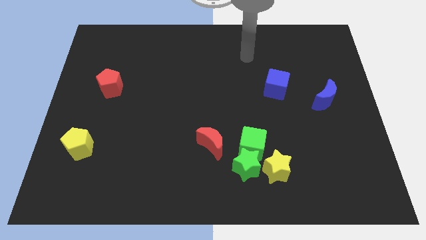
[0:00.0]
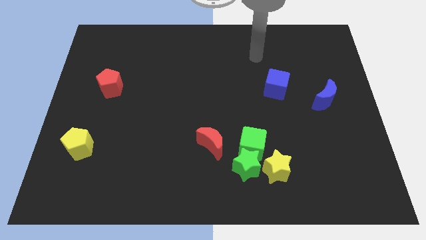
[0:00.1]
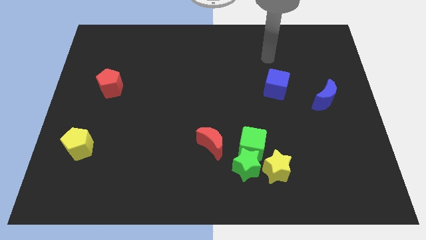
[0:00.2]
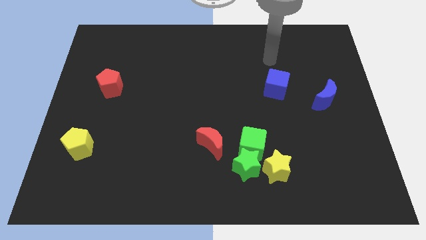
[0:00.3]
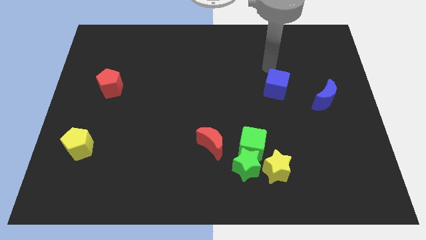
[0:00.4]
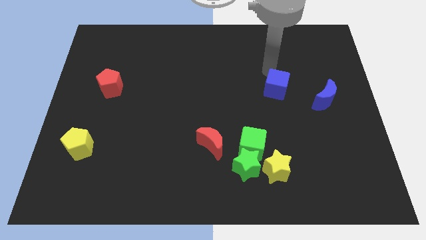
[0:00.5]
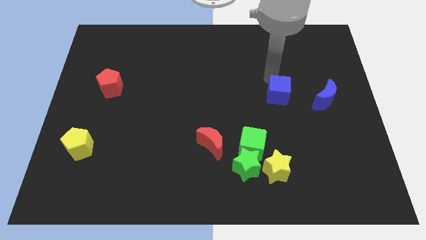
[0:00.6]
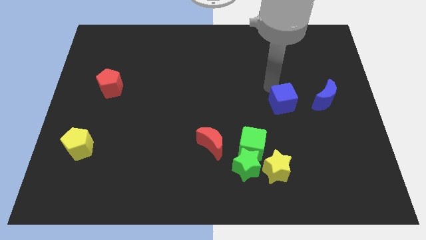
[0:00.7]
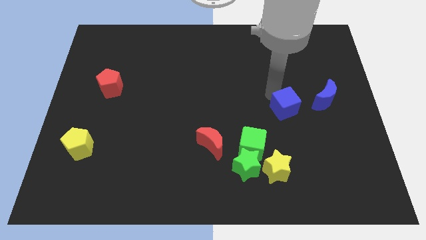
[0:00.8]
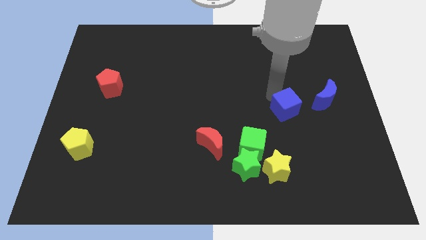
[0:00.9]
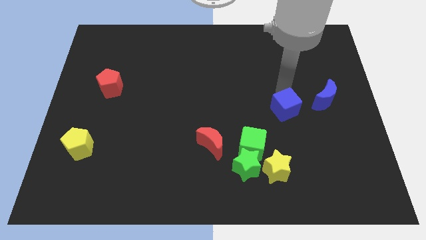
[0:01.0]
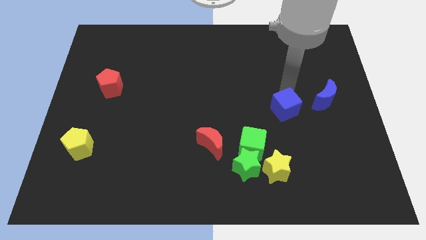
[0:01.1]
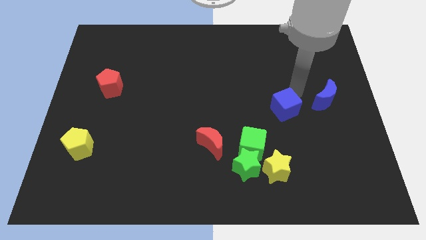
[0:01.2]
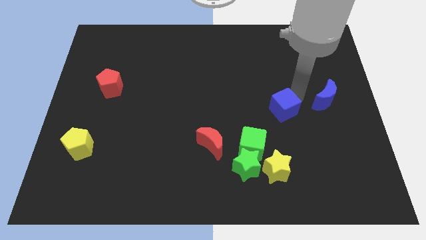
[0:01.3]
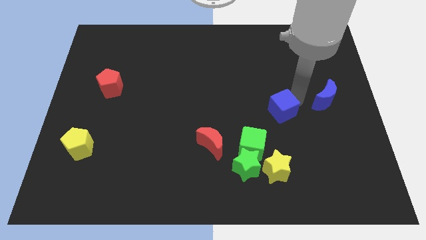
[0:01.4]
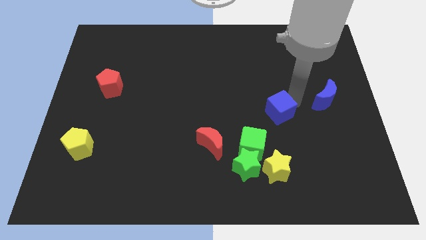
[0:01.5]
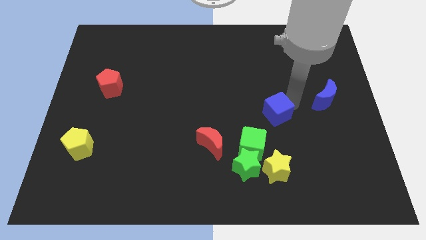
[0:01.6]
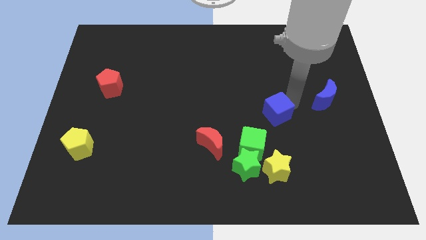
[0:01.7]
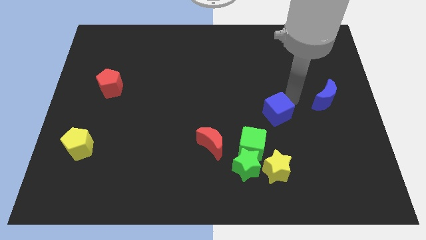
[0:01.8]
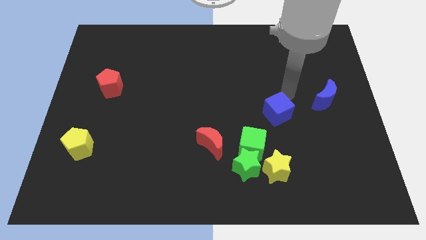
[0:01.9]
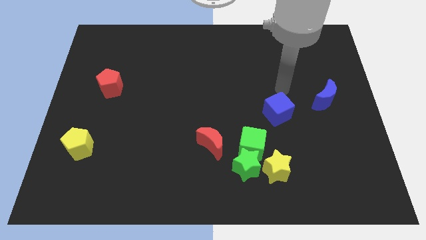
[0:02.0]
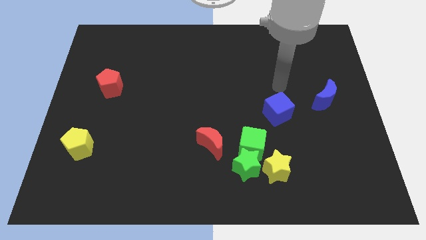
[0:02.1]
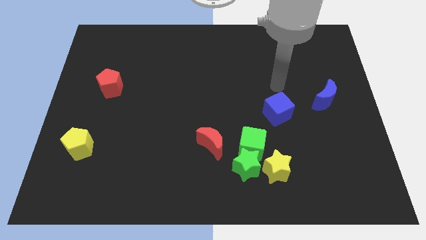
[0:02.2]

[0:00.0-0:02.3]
move the blue square slightly towards down

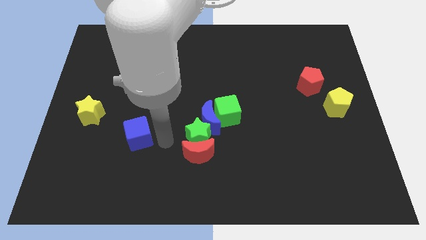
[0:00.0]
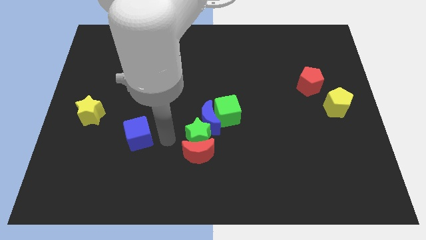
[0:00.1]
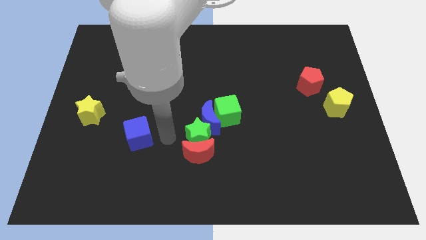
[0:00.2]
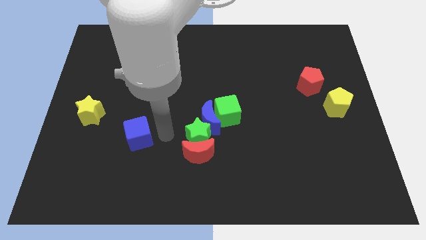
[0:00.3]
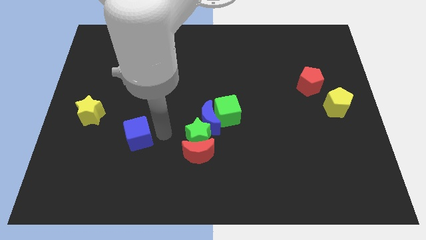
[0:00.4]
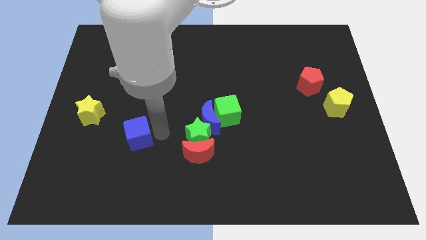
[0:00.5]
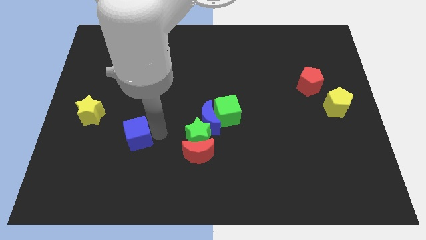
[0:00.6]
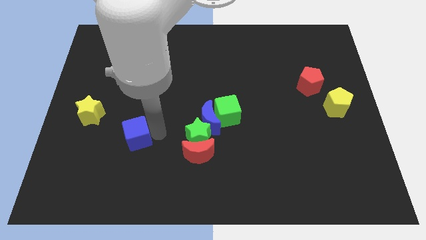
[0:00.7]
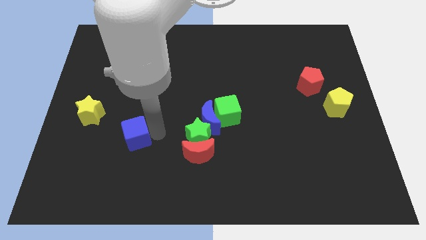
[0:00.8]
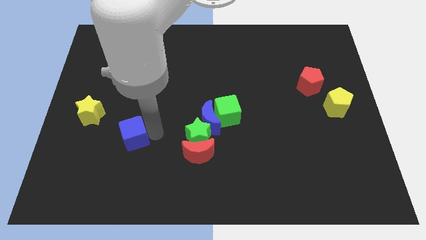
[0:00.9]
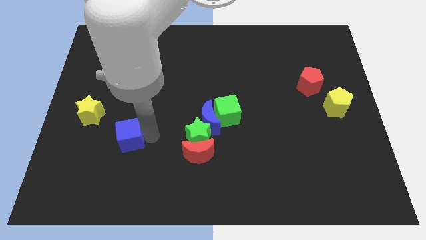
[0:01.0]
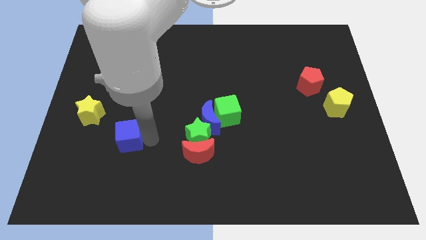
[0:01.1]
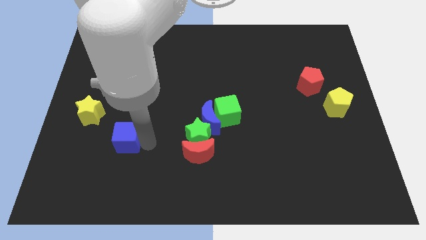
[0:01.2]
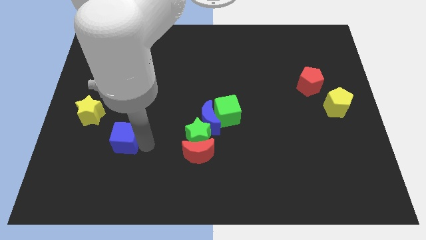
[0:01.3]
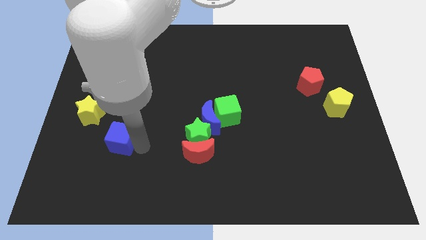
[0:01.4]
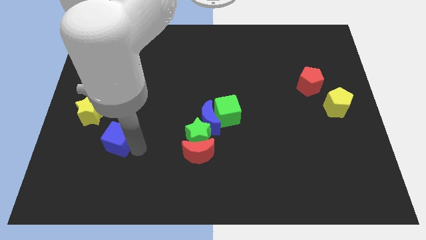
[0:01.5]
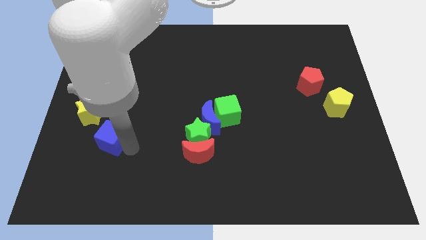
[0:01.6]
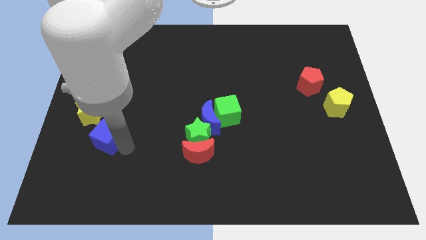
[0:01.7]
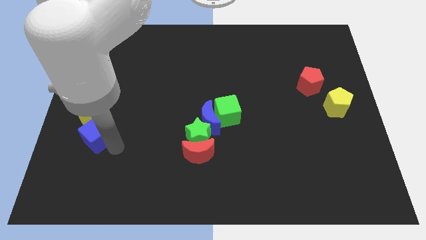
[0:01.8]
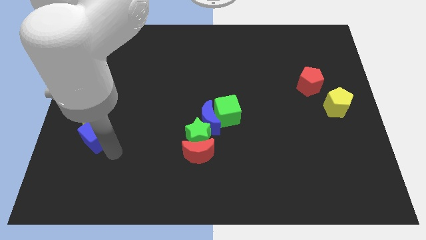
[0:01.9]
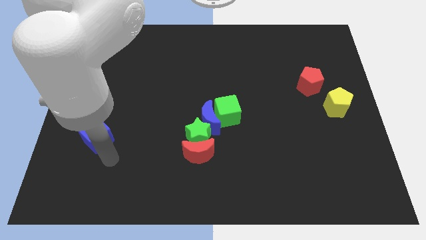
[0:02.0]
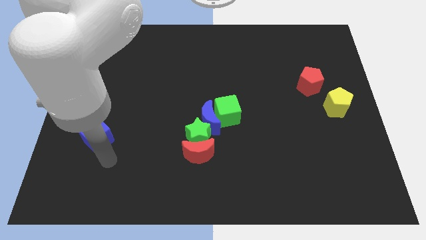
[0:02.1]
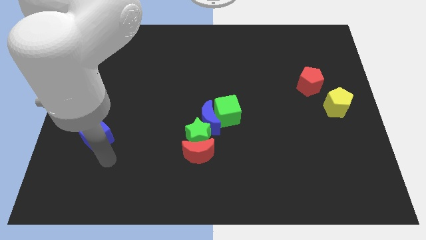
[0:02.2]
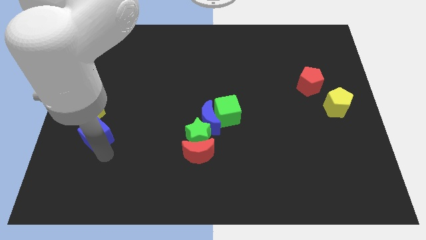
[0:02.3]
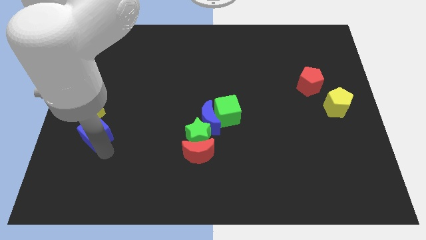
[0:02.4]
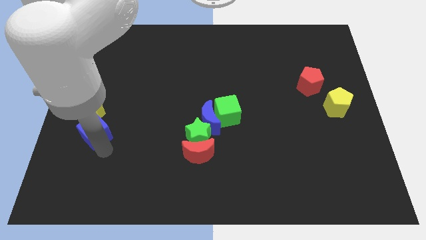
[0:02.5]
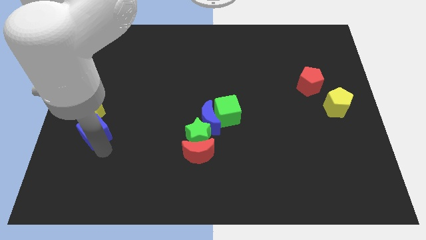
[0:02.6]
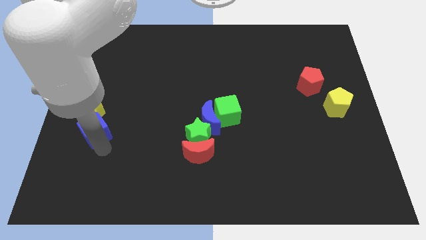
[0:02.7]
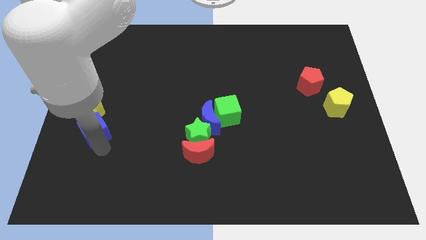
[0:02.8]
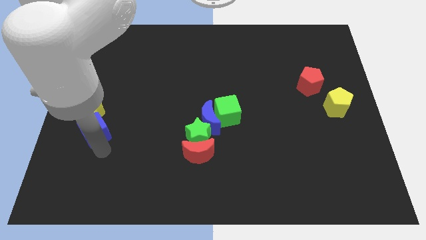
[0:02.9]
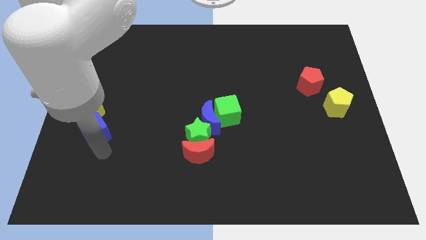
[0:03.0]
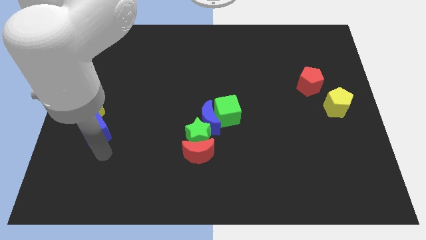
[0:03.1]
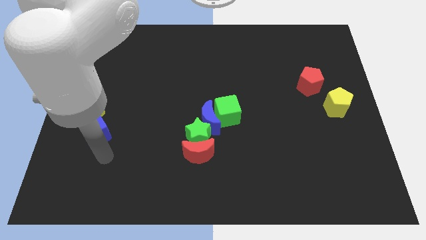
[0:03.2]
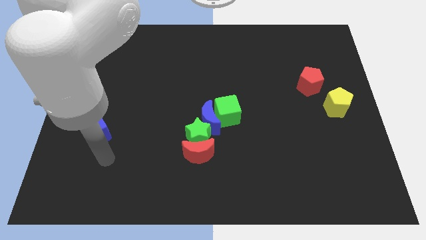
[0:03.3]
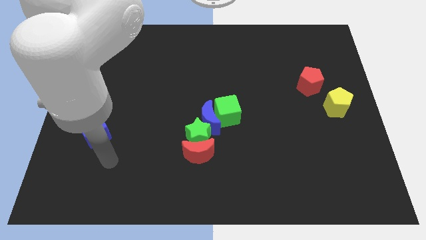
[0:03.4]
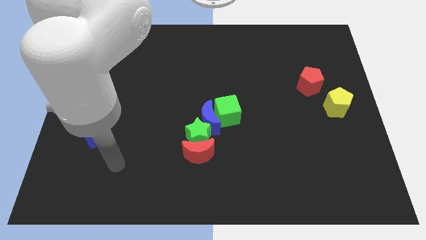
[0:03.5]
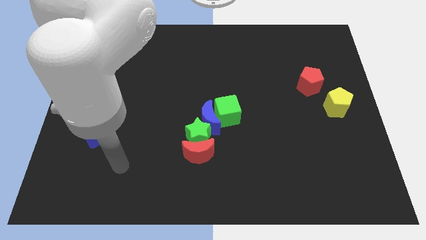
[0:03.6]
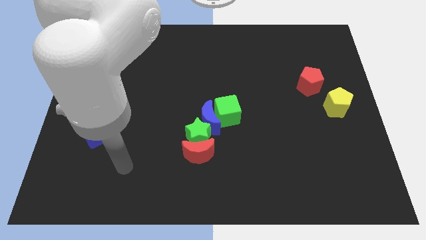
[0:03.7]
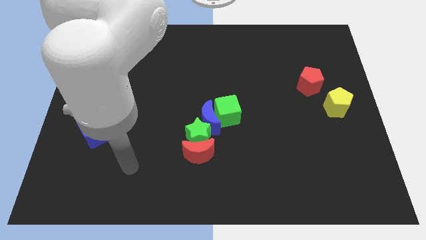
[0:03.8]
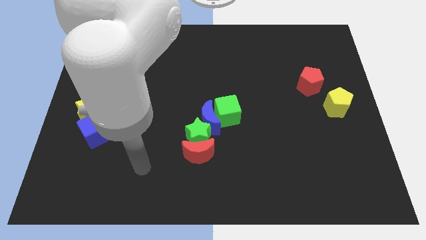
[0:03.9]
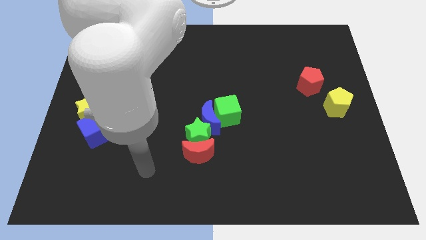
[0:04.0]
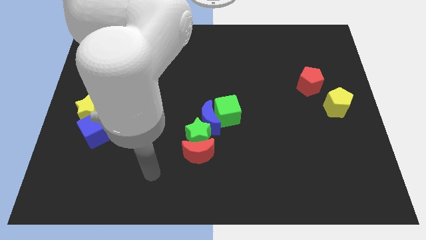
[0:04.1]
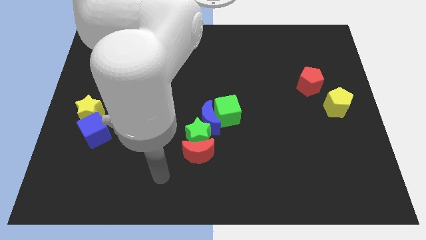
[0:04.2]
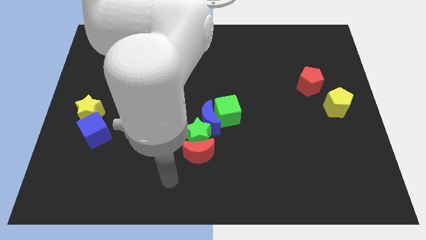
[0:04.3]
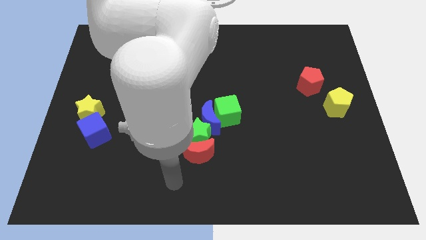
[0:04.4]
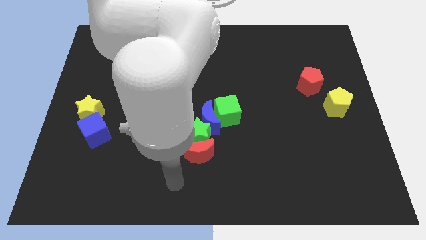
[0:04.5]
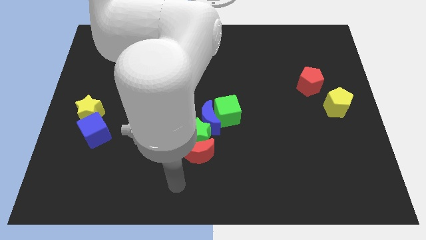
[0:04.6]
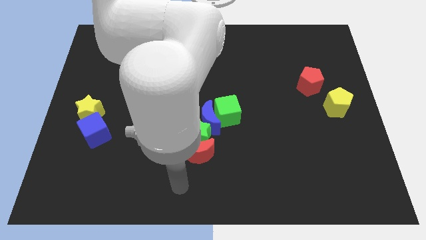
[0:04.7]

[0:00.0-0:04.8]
push the blue cube to the bottom of the yellow star

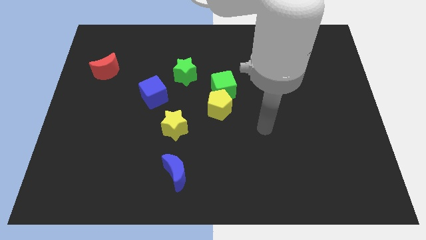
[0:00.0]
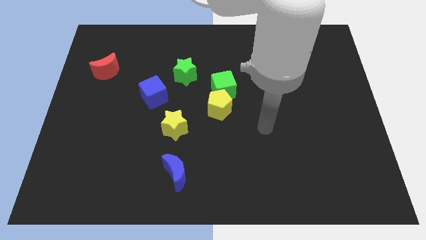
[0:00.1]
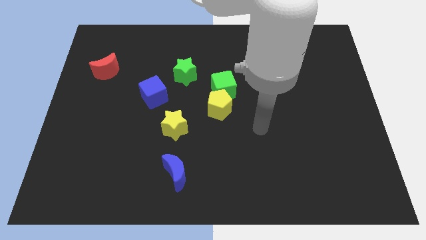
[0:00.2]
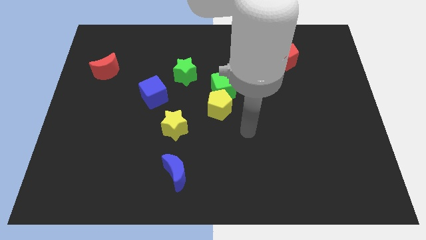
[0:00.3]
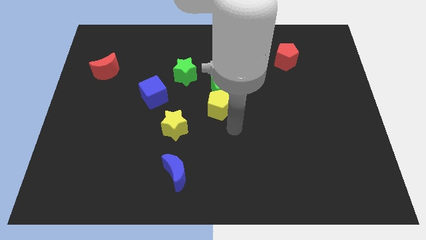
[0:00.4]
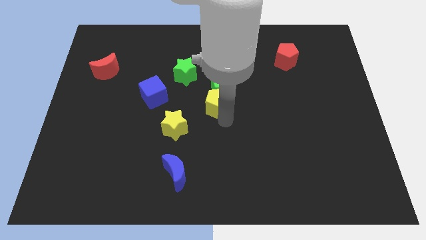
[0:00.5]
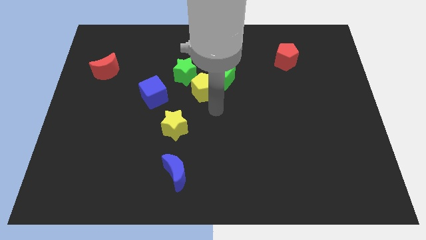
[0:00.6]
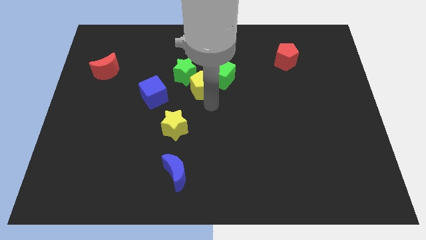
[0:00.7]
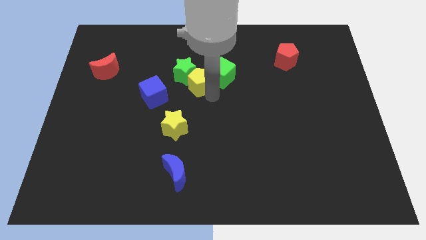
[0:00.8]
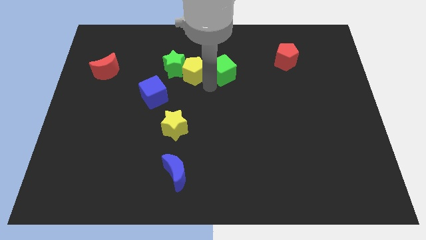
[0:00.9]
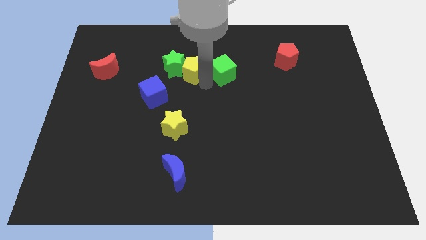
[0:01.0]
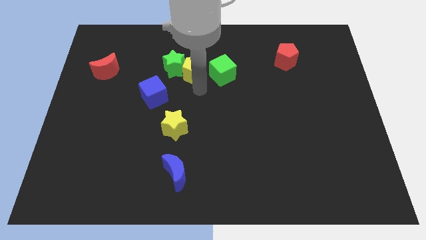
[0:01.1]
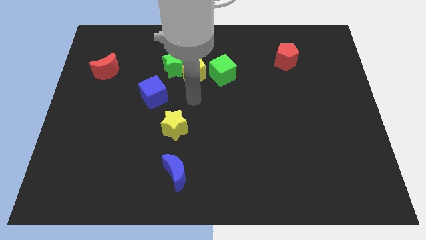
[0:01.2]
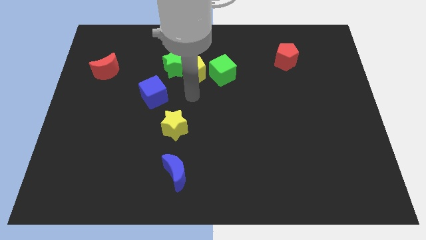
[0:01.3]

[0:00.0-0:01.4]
push the yellow pentagon in between the green star and green cube

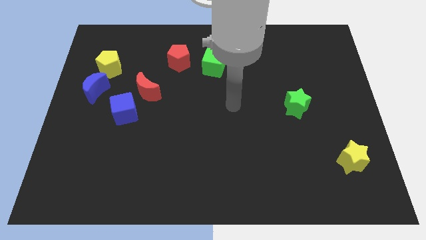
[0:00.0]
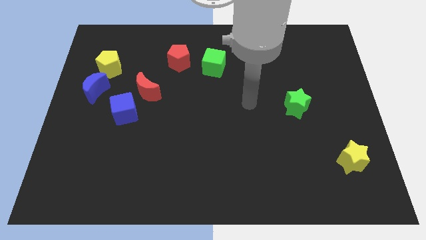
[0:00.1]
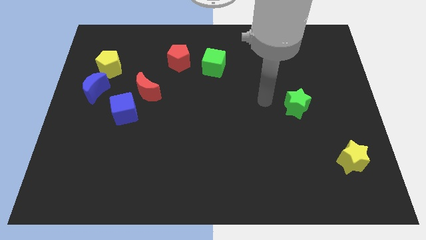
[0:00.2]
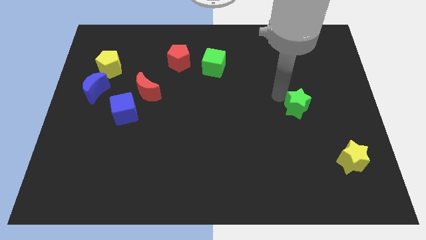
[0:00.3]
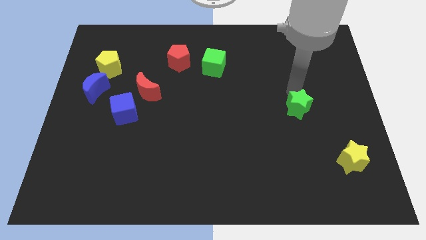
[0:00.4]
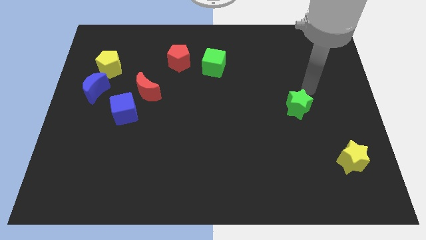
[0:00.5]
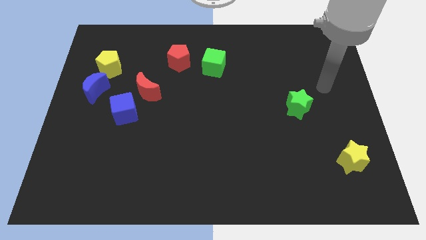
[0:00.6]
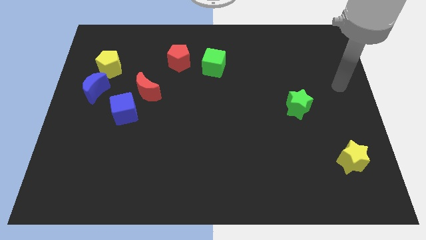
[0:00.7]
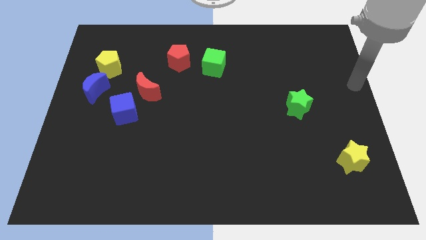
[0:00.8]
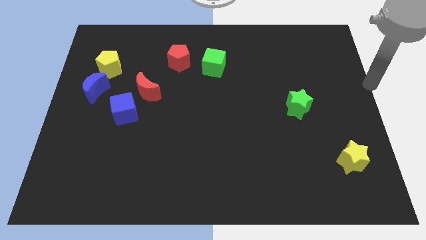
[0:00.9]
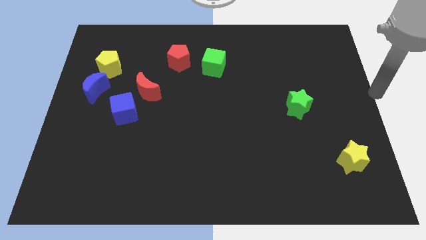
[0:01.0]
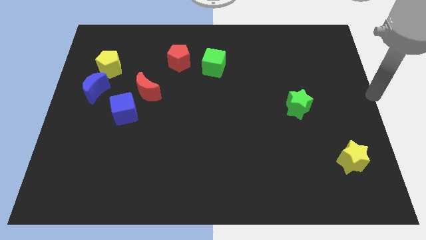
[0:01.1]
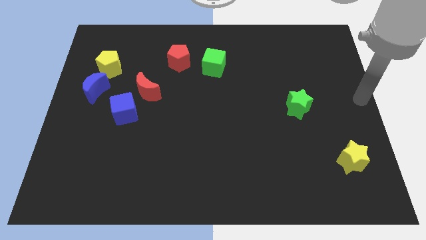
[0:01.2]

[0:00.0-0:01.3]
place your arm to the right center of the board
